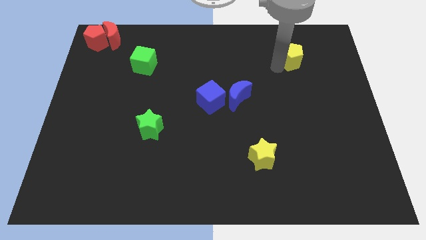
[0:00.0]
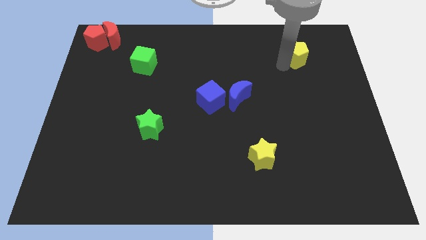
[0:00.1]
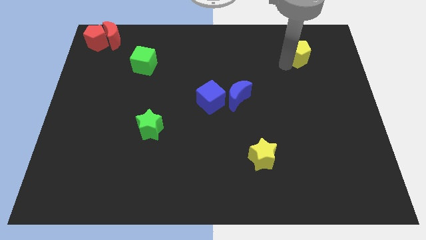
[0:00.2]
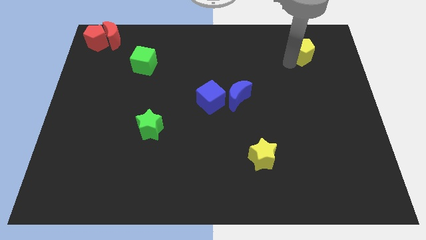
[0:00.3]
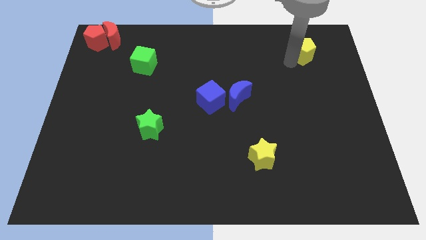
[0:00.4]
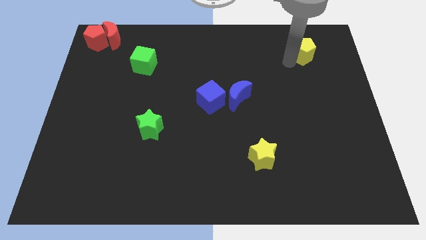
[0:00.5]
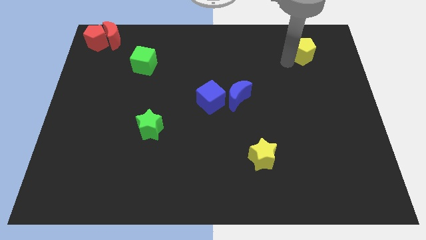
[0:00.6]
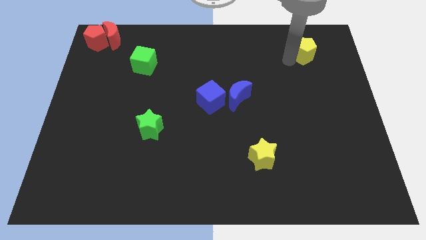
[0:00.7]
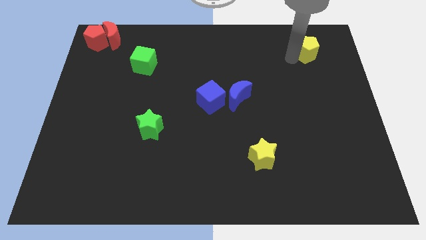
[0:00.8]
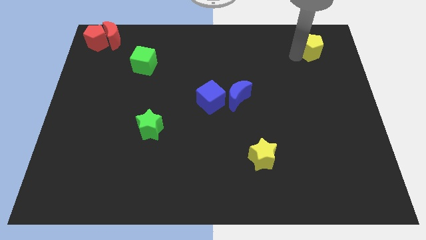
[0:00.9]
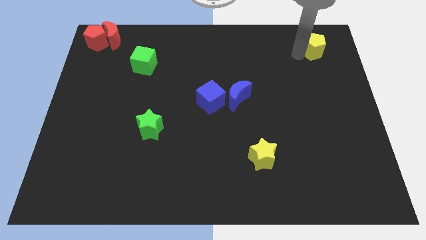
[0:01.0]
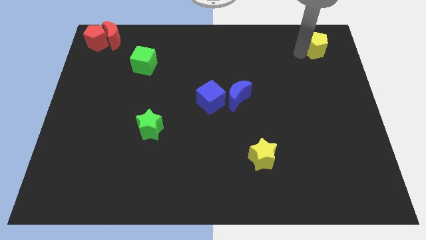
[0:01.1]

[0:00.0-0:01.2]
place the yellow pentagon to the right top

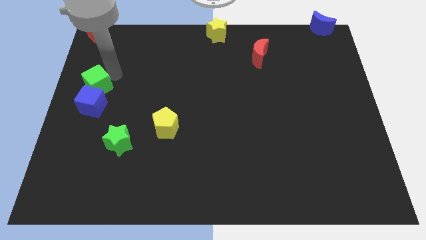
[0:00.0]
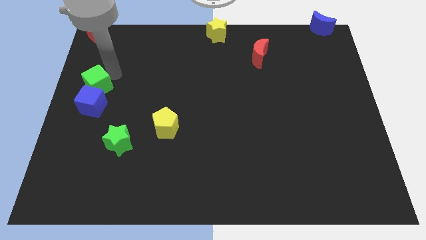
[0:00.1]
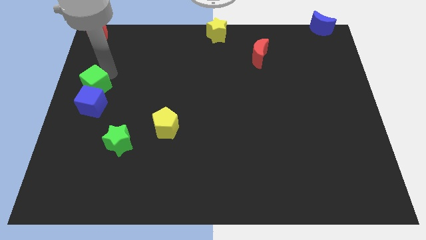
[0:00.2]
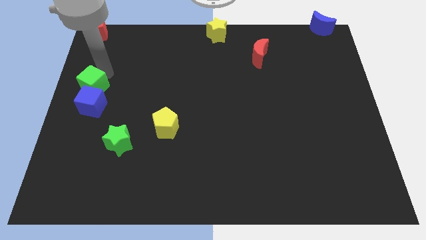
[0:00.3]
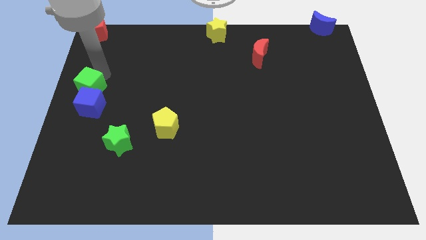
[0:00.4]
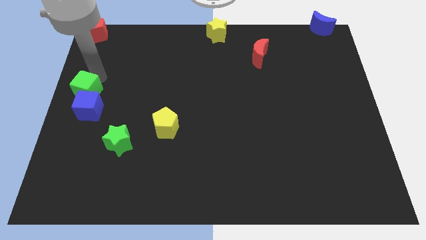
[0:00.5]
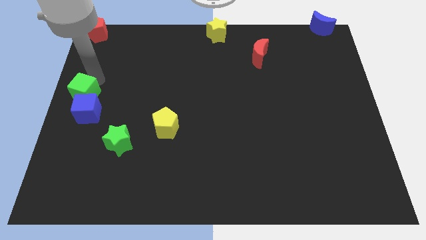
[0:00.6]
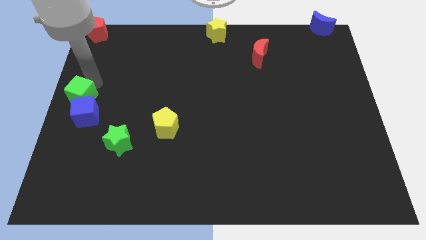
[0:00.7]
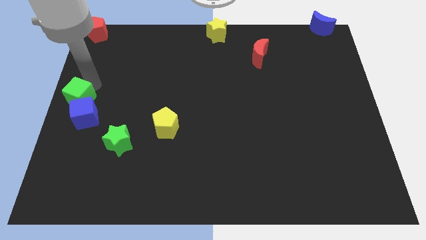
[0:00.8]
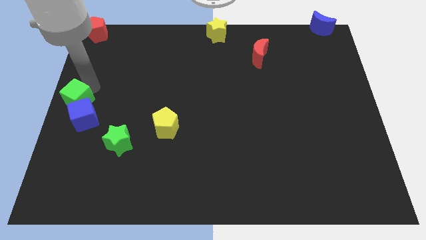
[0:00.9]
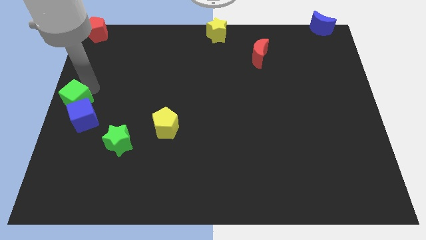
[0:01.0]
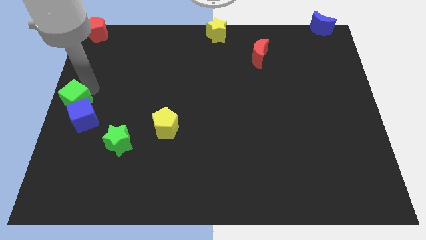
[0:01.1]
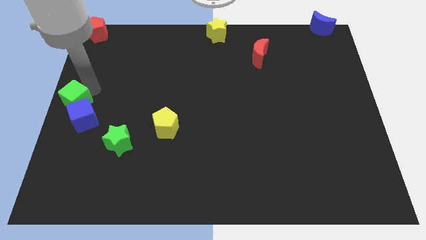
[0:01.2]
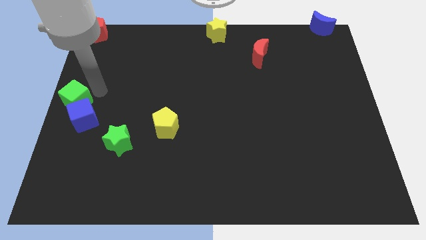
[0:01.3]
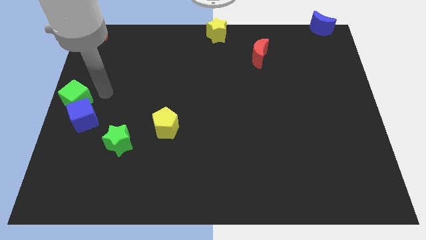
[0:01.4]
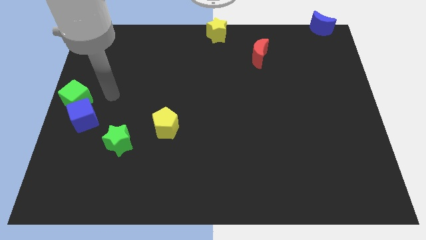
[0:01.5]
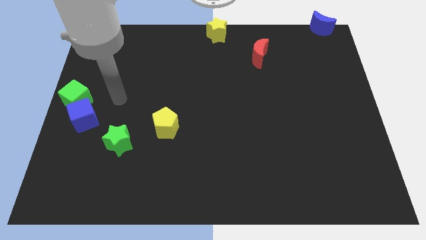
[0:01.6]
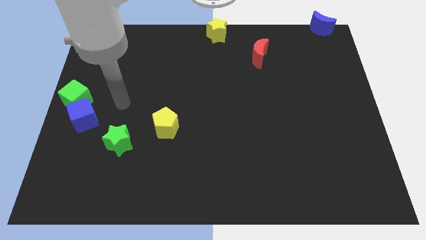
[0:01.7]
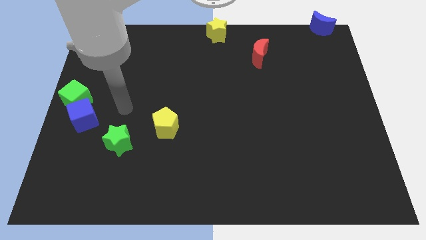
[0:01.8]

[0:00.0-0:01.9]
drag the green cube to the left side of the board

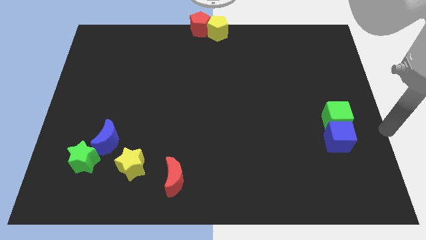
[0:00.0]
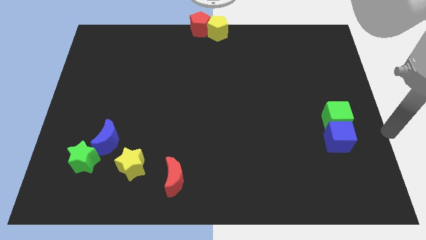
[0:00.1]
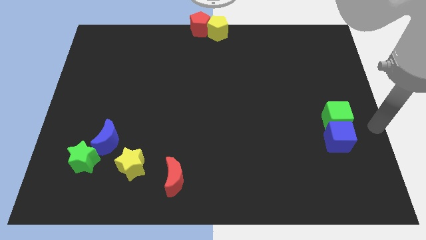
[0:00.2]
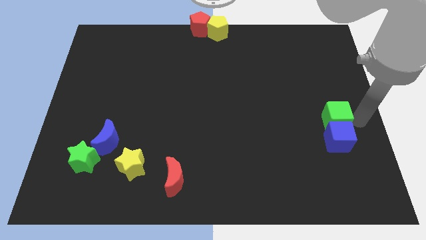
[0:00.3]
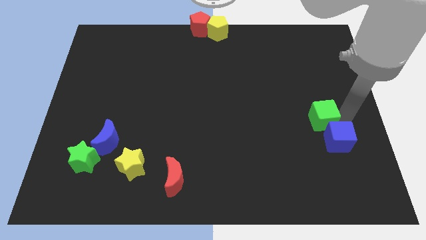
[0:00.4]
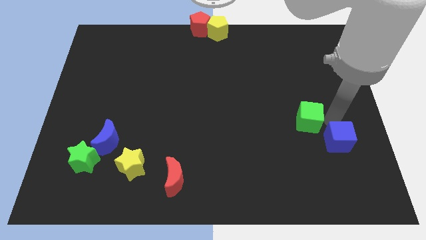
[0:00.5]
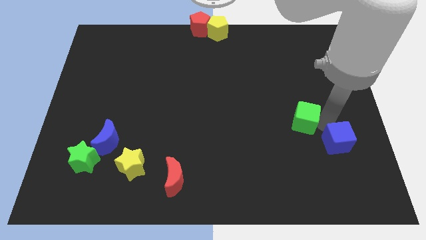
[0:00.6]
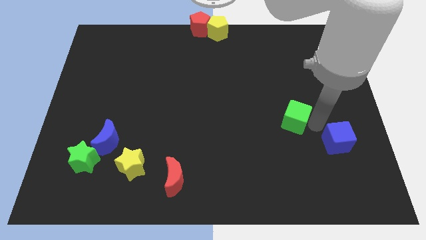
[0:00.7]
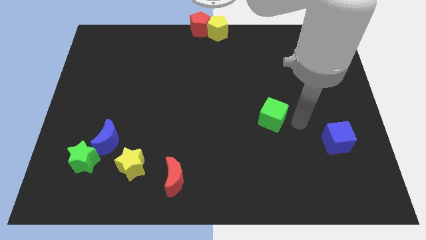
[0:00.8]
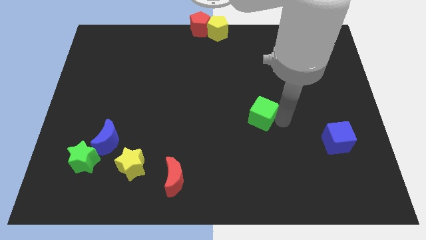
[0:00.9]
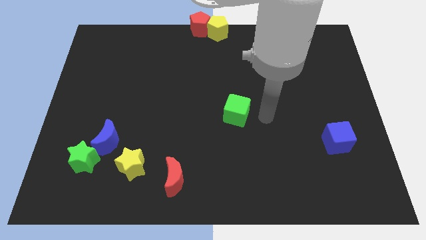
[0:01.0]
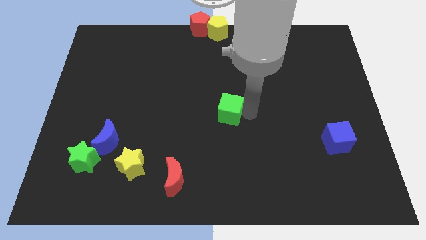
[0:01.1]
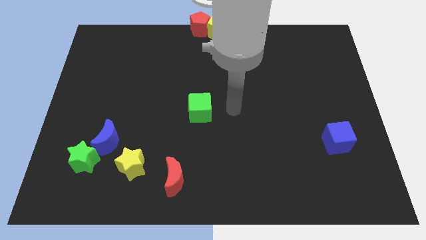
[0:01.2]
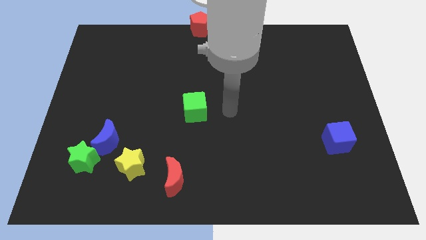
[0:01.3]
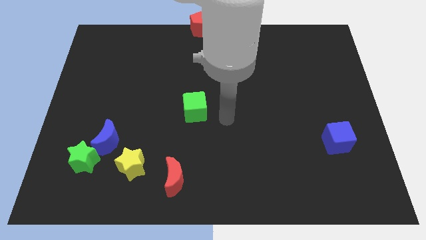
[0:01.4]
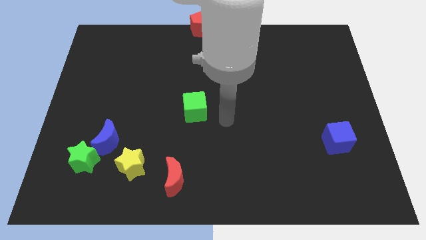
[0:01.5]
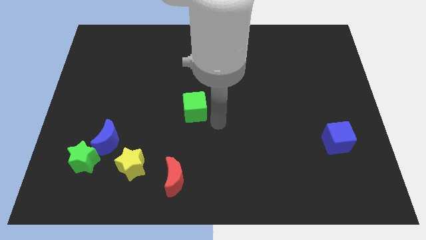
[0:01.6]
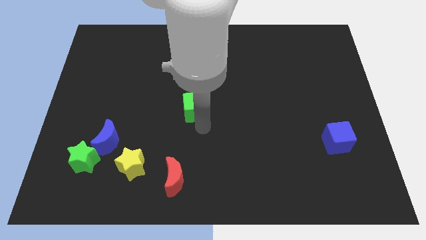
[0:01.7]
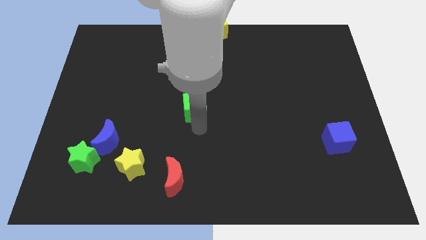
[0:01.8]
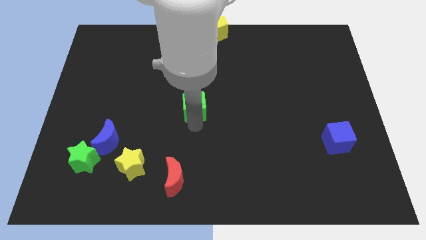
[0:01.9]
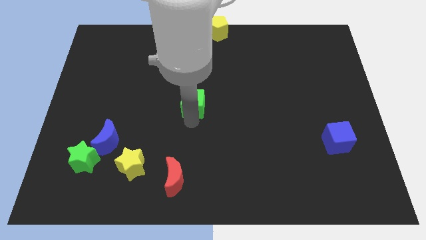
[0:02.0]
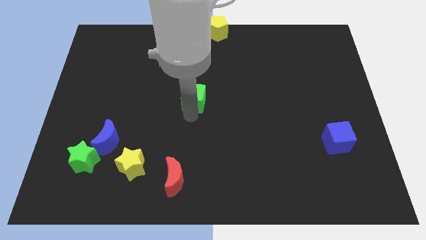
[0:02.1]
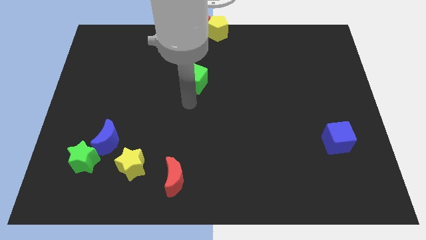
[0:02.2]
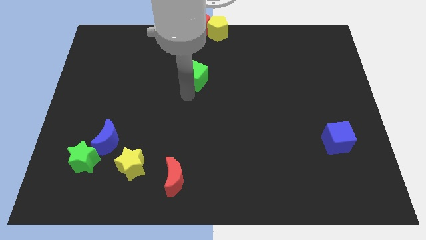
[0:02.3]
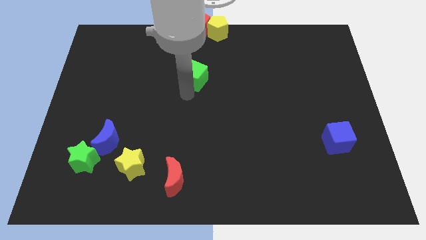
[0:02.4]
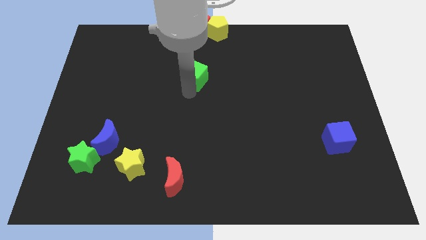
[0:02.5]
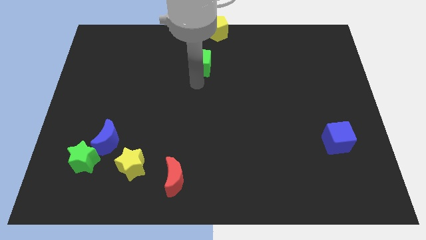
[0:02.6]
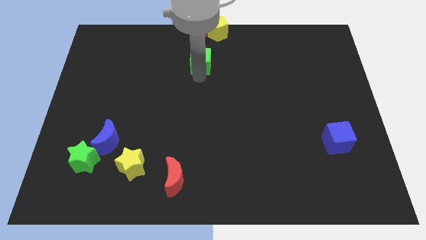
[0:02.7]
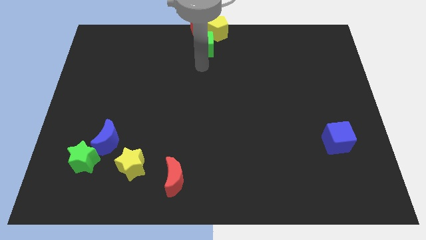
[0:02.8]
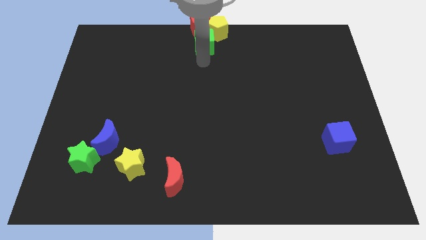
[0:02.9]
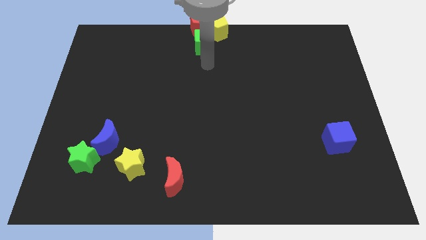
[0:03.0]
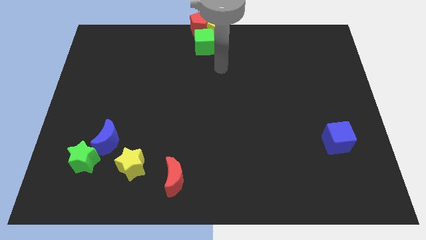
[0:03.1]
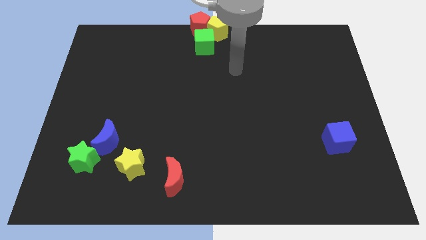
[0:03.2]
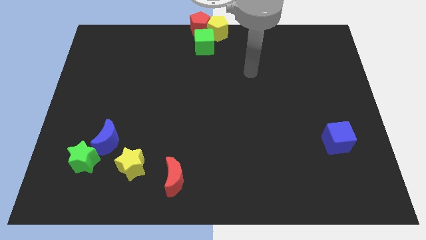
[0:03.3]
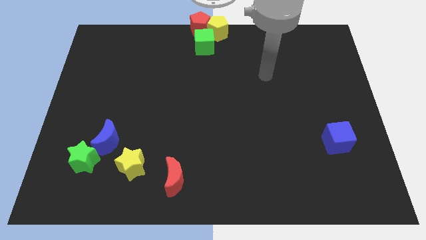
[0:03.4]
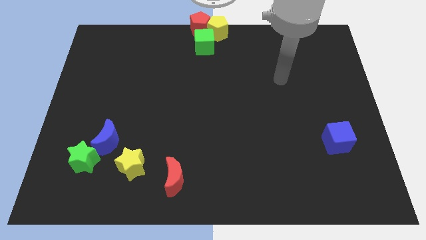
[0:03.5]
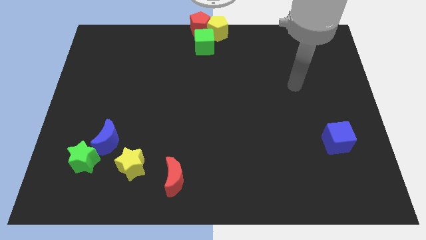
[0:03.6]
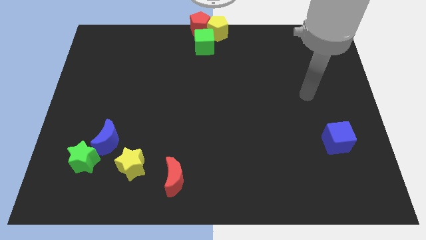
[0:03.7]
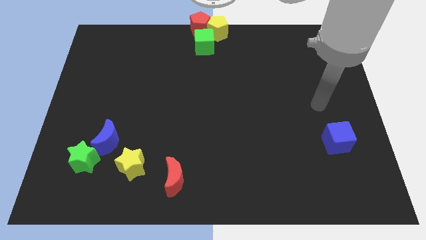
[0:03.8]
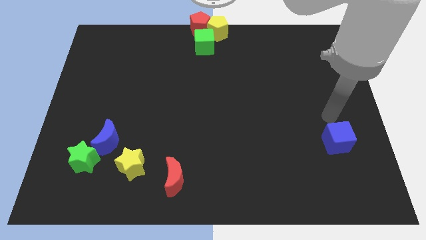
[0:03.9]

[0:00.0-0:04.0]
move the green cube to the bottom left side of the yellow pentagon

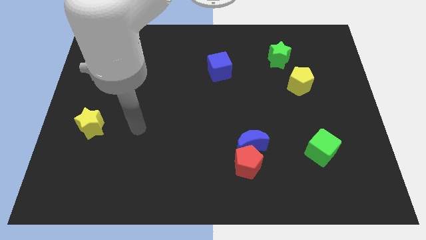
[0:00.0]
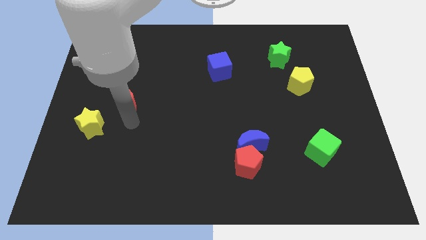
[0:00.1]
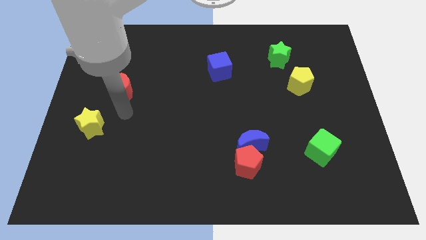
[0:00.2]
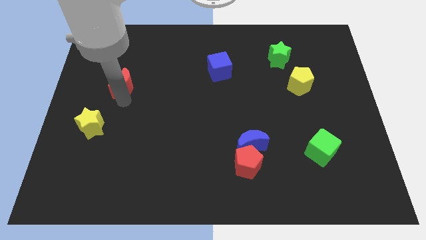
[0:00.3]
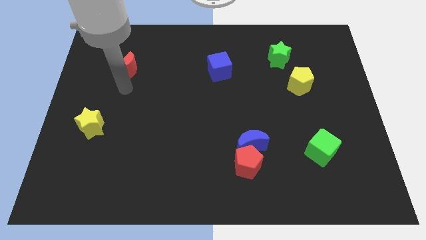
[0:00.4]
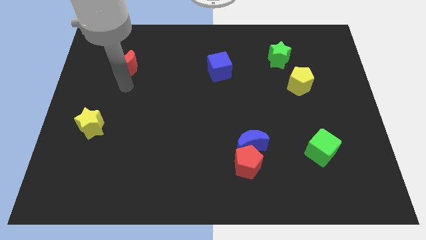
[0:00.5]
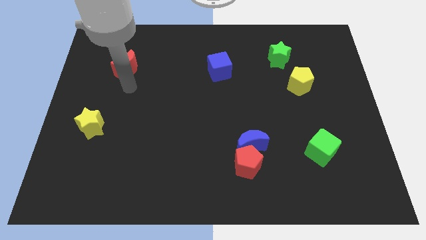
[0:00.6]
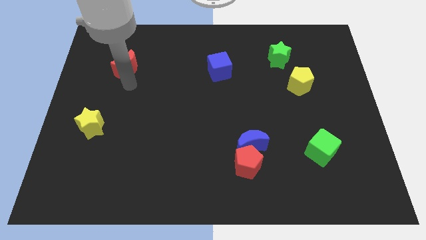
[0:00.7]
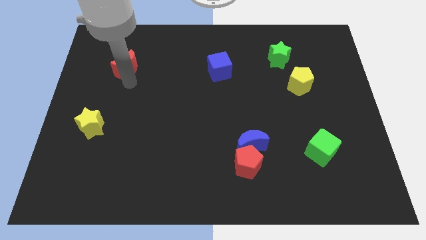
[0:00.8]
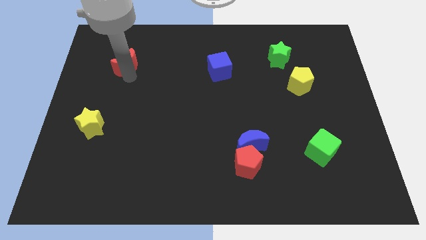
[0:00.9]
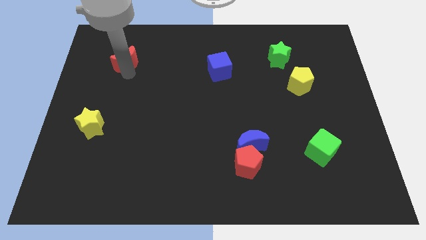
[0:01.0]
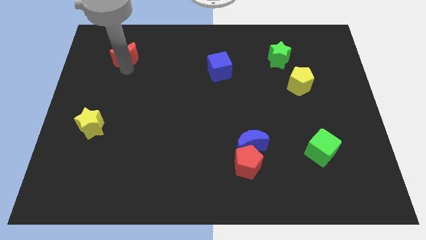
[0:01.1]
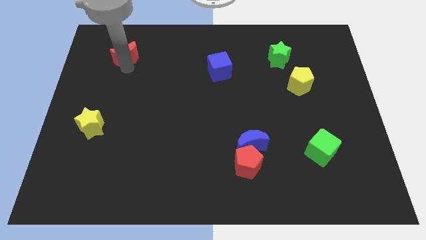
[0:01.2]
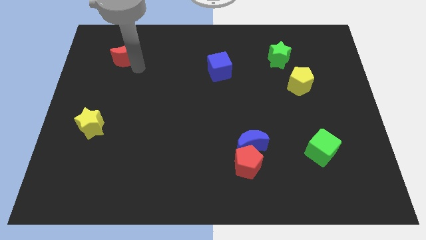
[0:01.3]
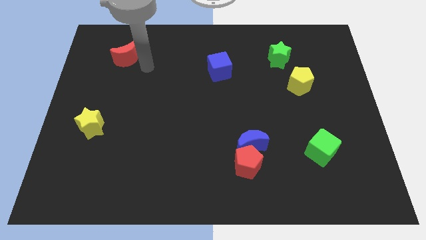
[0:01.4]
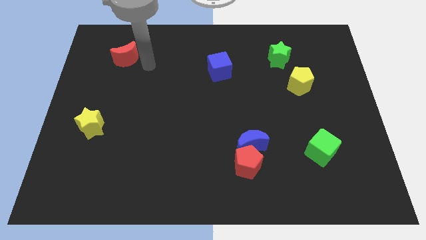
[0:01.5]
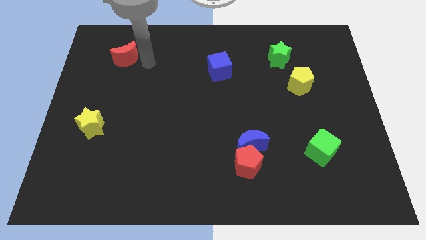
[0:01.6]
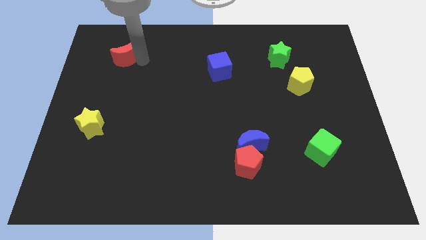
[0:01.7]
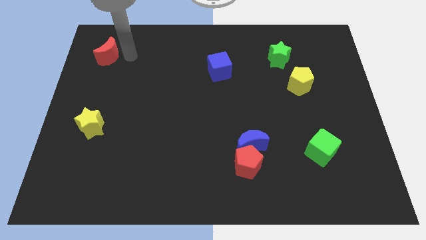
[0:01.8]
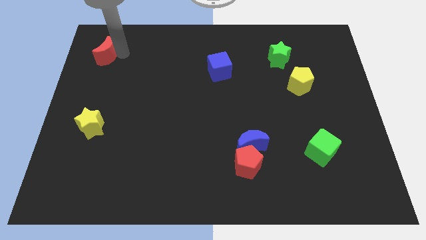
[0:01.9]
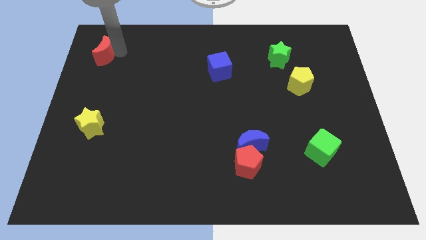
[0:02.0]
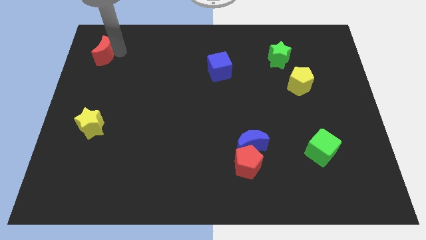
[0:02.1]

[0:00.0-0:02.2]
slide red moon above the yellow star vertically
